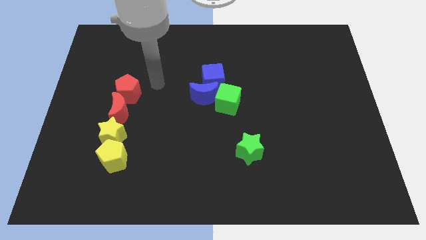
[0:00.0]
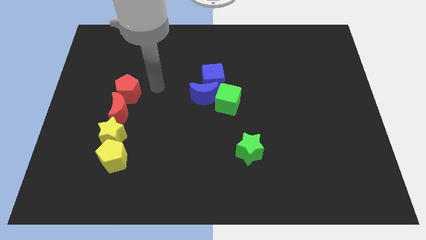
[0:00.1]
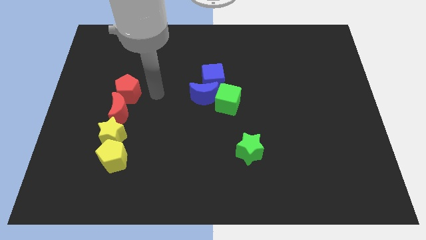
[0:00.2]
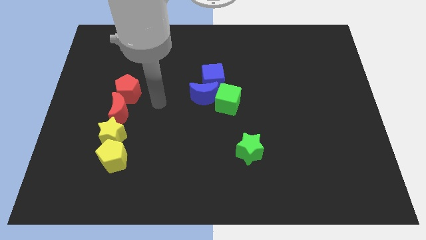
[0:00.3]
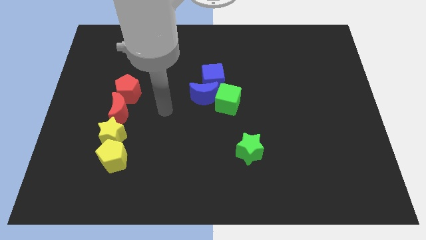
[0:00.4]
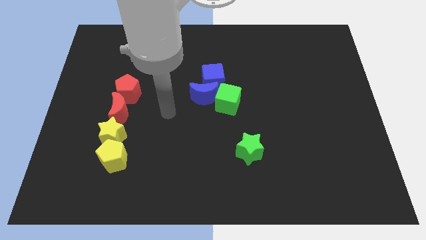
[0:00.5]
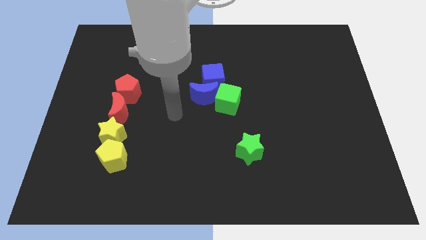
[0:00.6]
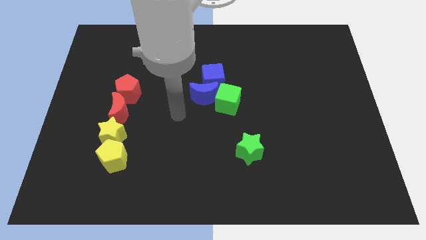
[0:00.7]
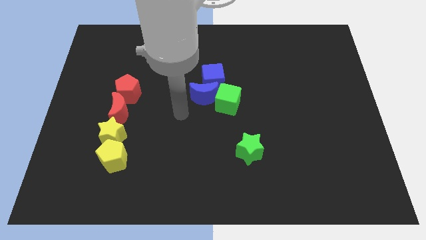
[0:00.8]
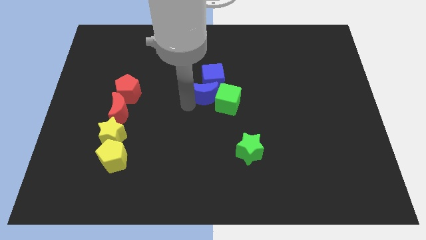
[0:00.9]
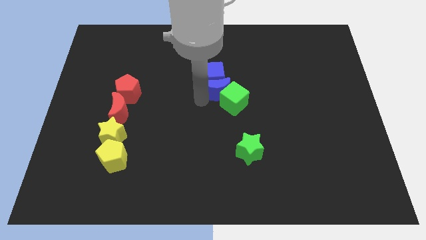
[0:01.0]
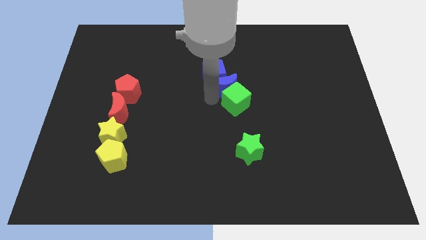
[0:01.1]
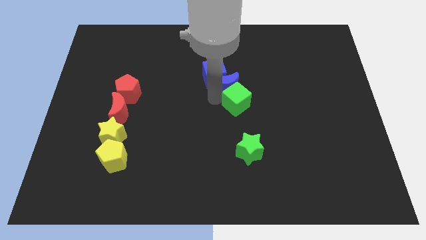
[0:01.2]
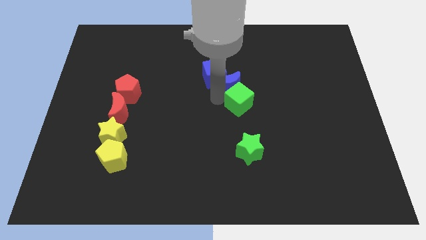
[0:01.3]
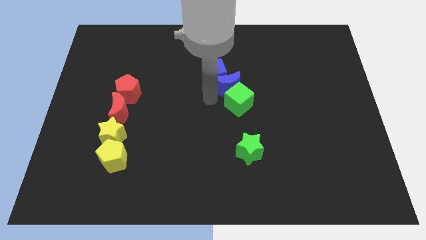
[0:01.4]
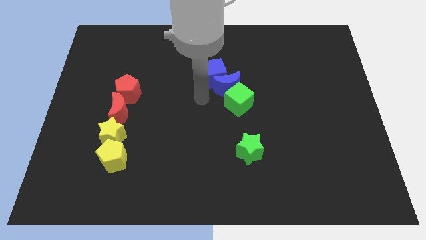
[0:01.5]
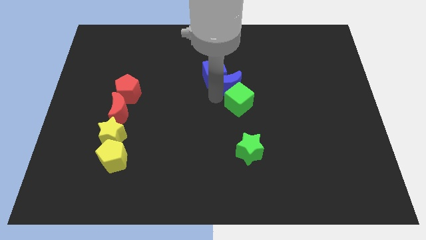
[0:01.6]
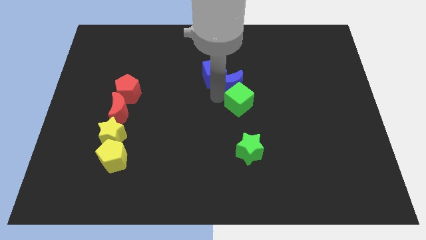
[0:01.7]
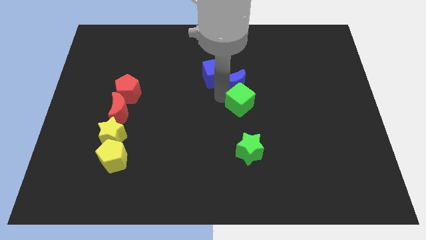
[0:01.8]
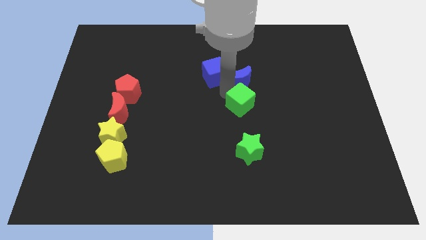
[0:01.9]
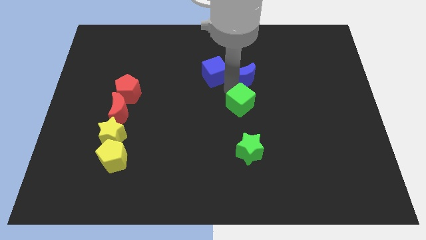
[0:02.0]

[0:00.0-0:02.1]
place the blue moon to the top of the green cube

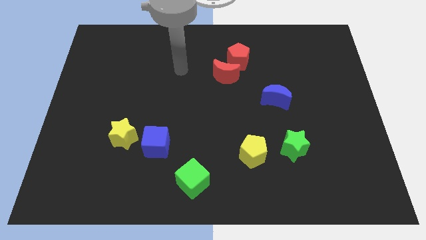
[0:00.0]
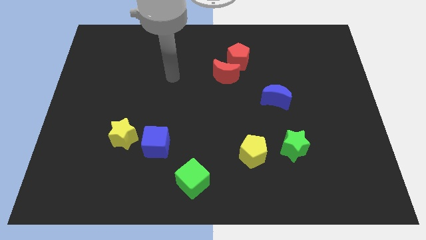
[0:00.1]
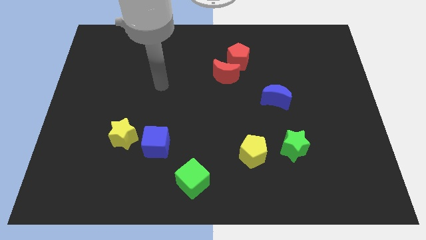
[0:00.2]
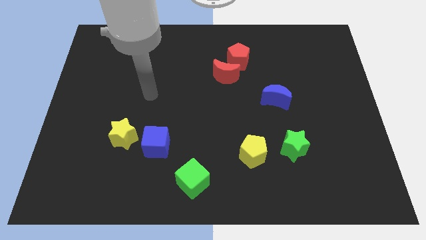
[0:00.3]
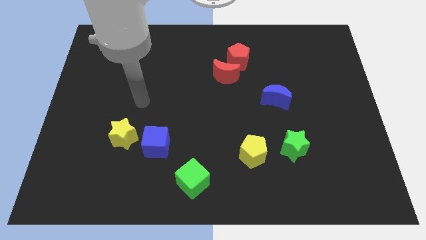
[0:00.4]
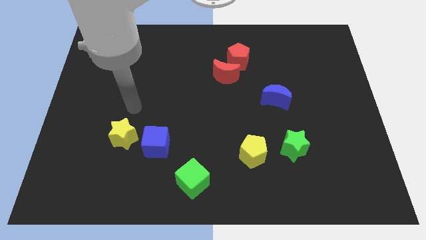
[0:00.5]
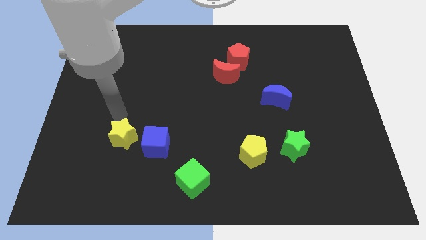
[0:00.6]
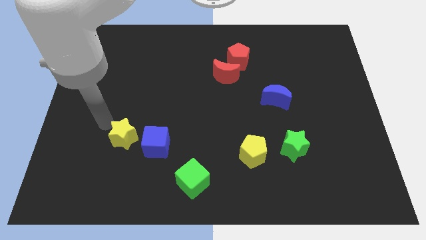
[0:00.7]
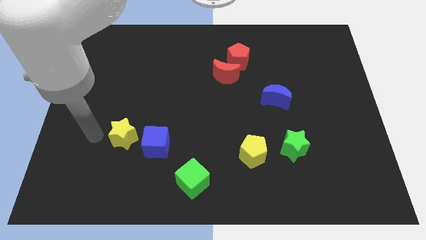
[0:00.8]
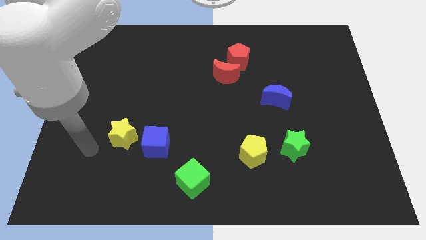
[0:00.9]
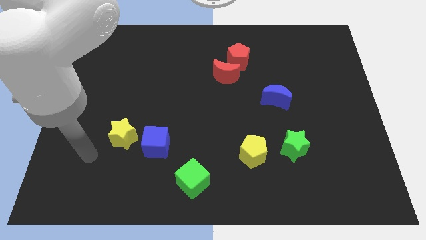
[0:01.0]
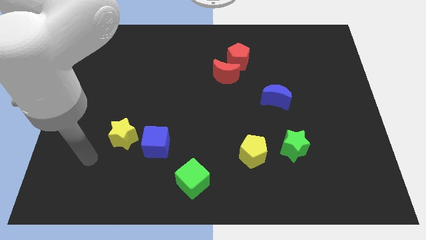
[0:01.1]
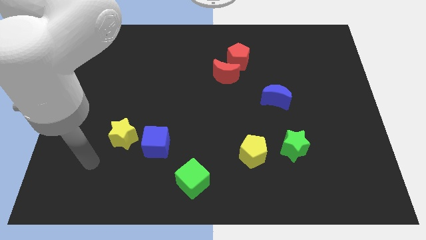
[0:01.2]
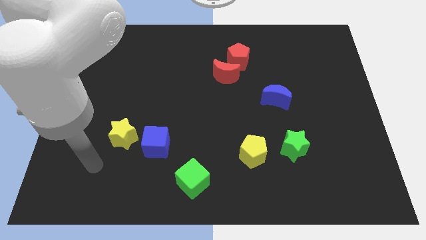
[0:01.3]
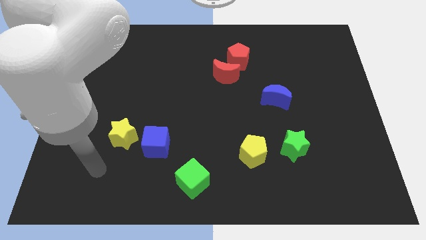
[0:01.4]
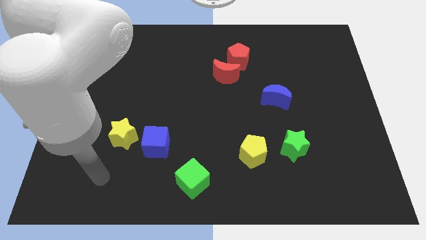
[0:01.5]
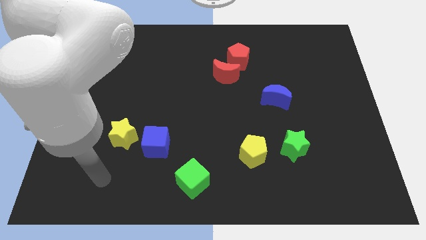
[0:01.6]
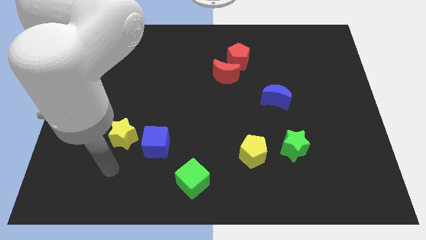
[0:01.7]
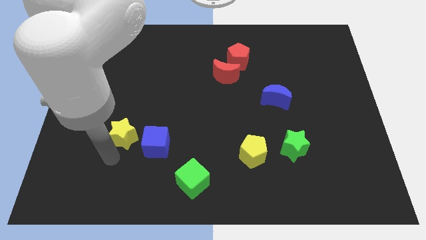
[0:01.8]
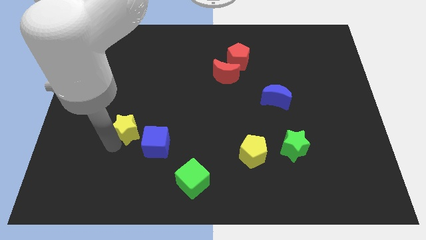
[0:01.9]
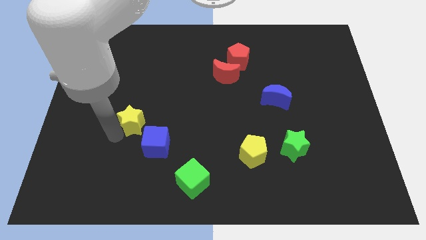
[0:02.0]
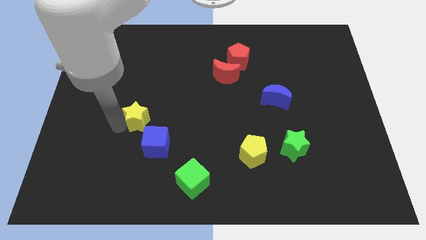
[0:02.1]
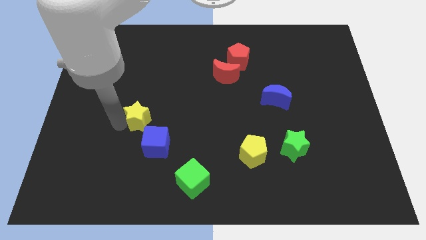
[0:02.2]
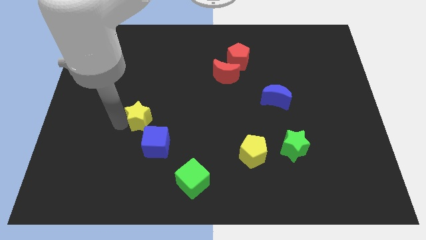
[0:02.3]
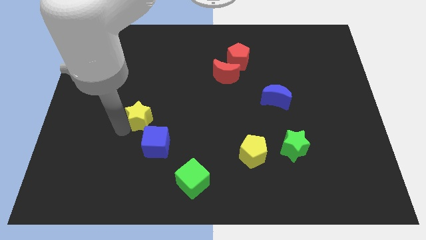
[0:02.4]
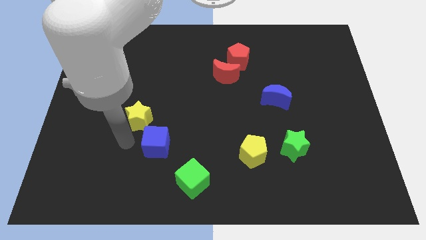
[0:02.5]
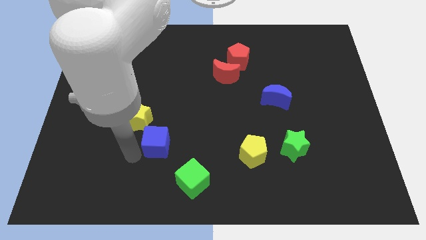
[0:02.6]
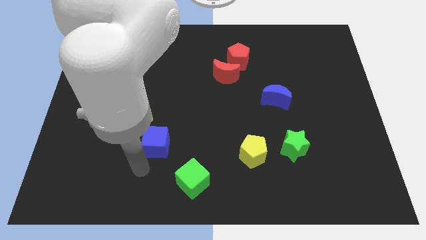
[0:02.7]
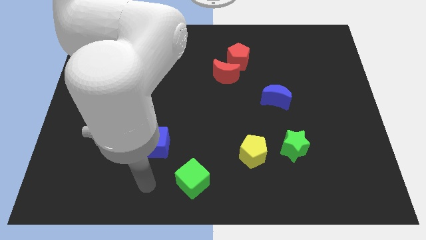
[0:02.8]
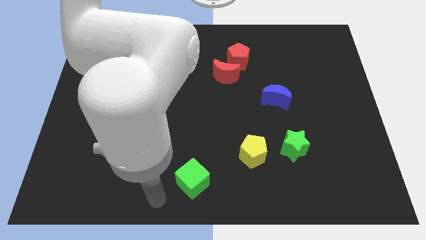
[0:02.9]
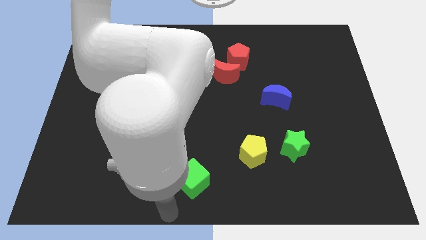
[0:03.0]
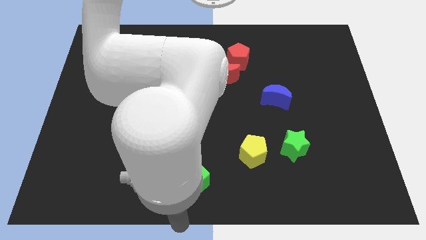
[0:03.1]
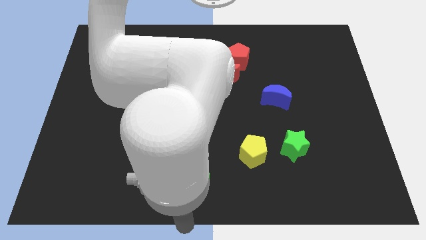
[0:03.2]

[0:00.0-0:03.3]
slightly move the yellow star to the left center

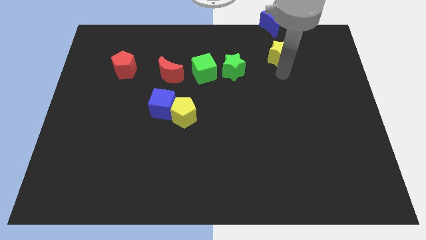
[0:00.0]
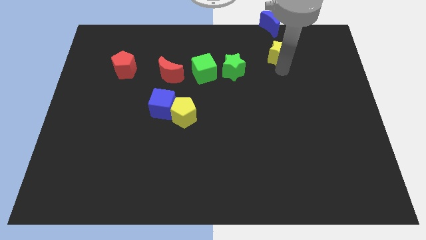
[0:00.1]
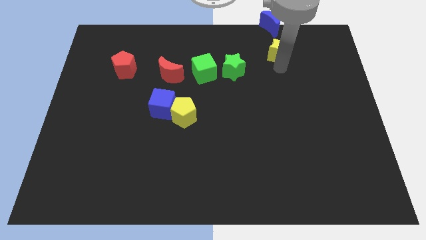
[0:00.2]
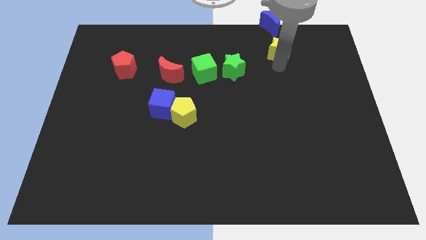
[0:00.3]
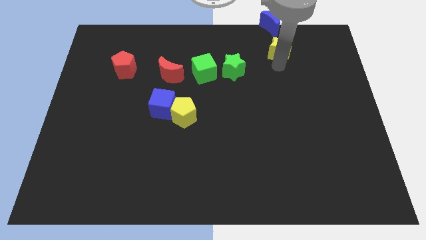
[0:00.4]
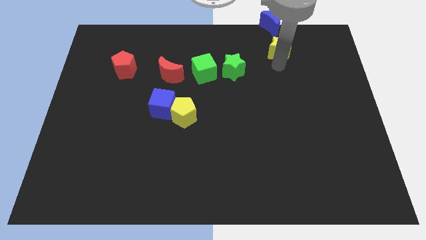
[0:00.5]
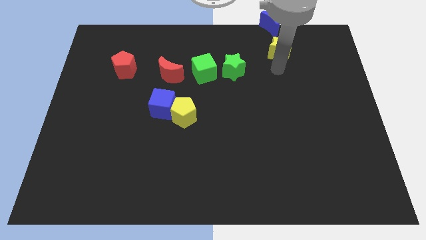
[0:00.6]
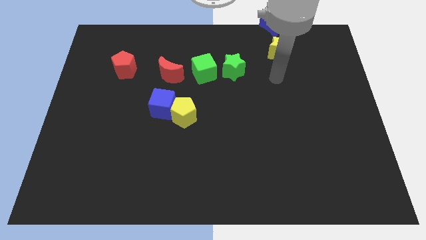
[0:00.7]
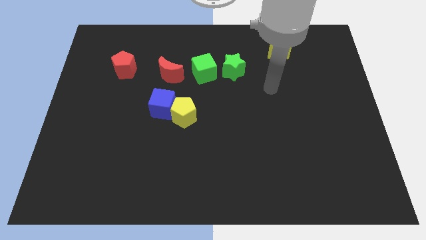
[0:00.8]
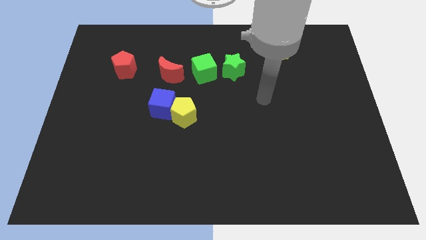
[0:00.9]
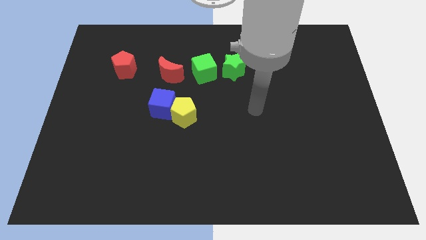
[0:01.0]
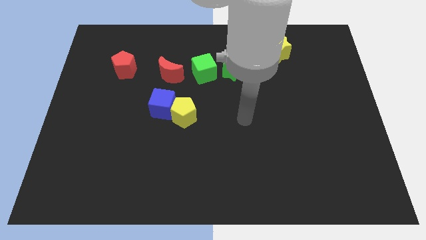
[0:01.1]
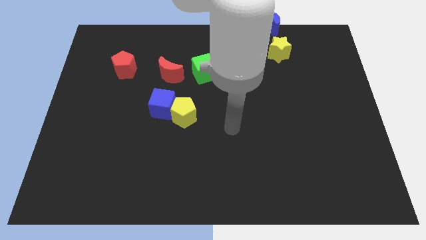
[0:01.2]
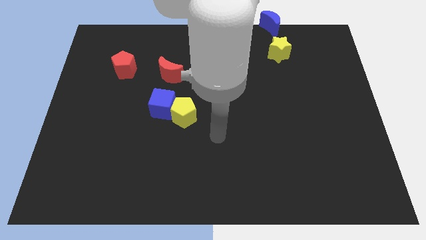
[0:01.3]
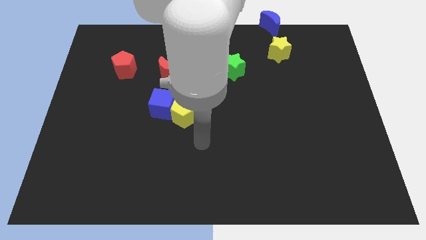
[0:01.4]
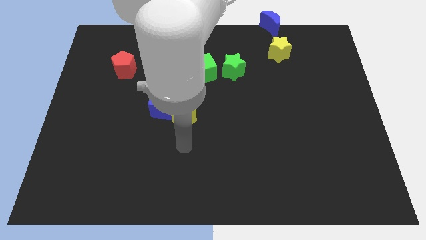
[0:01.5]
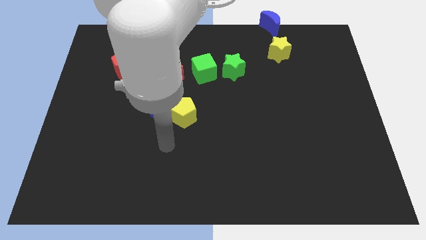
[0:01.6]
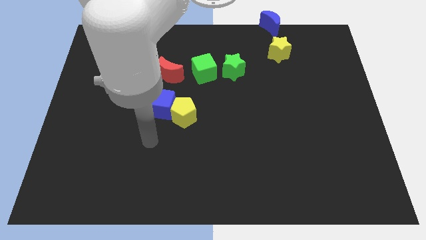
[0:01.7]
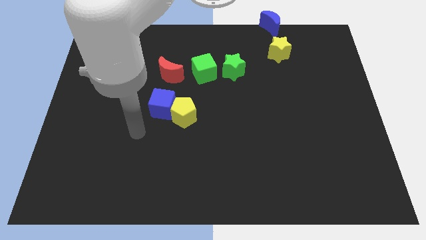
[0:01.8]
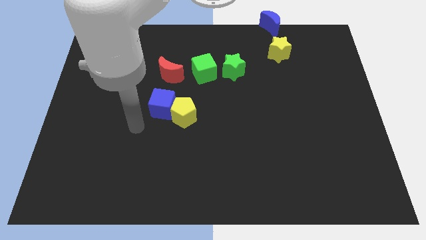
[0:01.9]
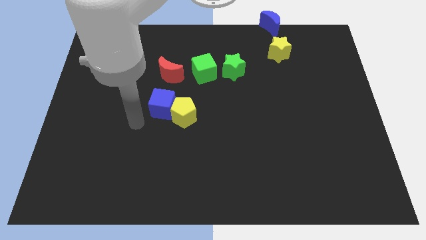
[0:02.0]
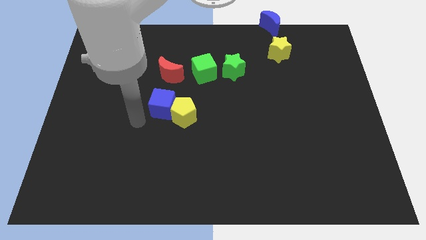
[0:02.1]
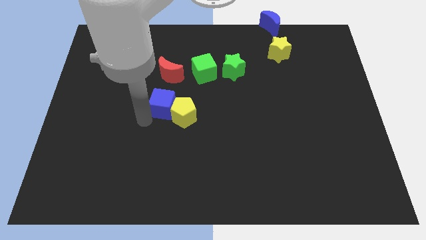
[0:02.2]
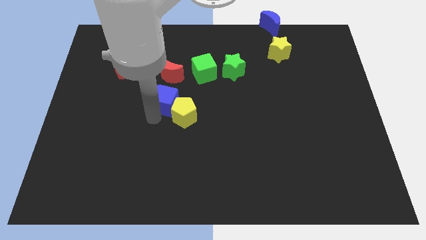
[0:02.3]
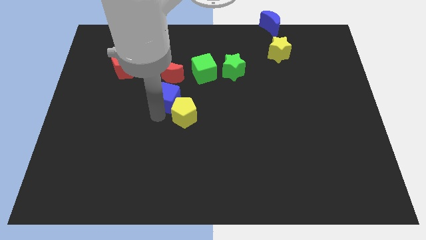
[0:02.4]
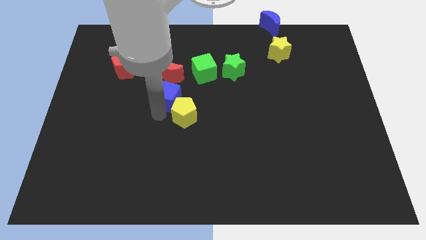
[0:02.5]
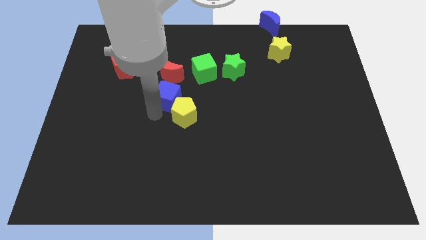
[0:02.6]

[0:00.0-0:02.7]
place the blue cube below the red crescent

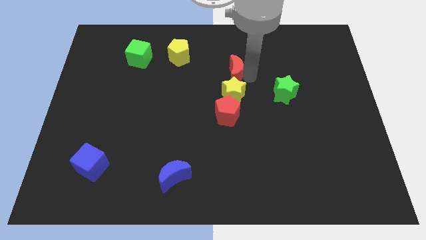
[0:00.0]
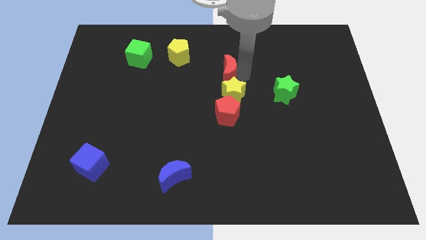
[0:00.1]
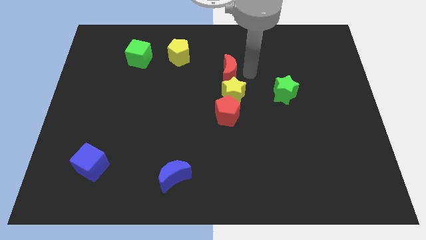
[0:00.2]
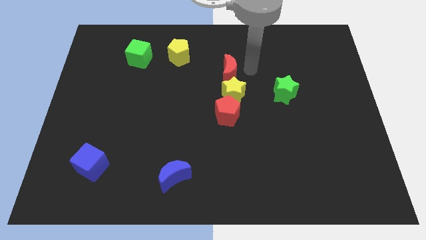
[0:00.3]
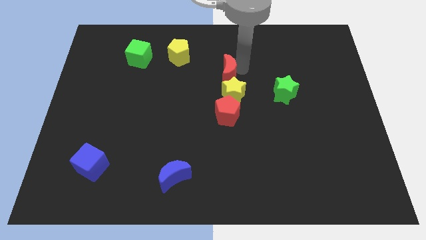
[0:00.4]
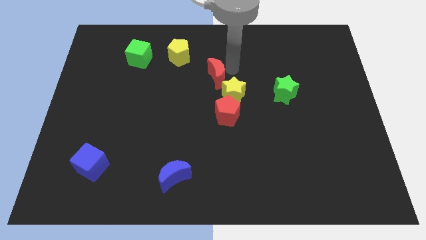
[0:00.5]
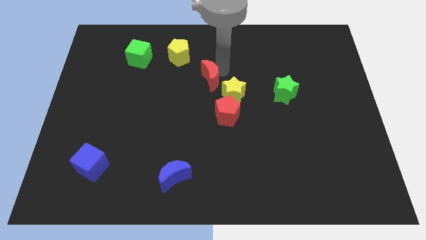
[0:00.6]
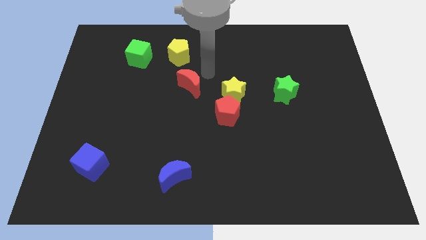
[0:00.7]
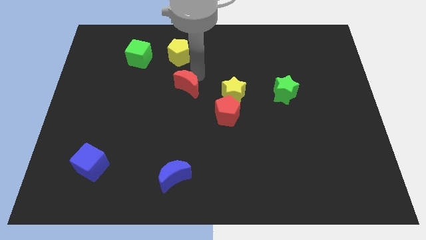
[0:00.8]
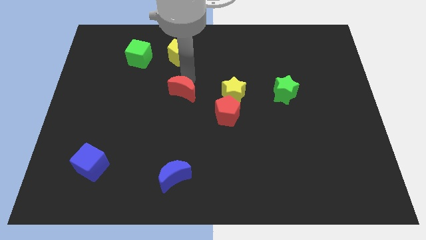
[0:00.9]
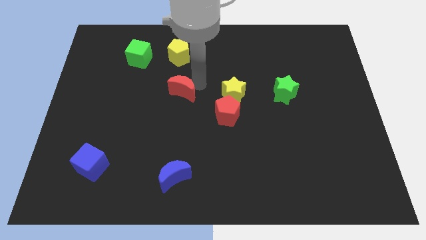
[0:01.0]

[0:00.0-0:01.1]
push the red crescent below the yellow pentagon
